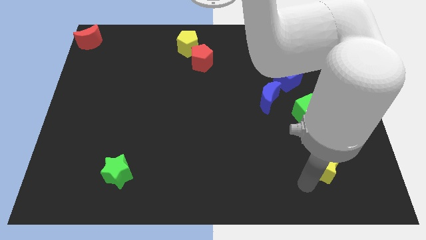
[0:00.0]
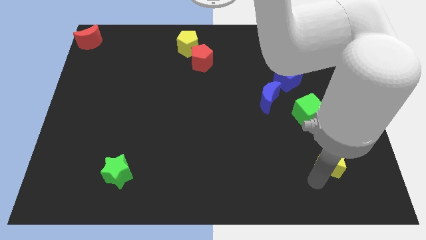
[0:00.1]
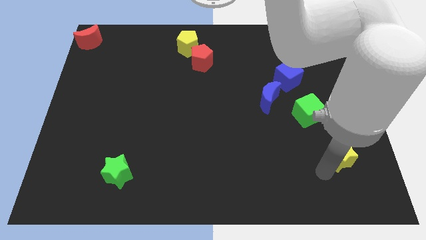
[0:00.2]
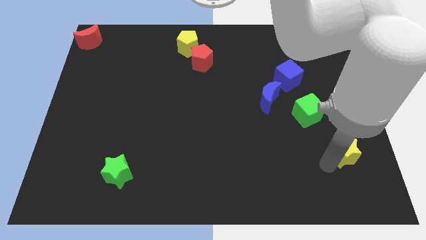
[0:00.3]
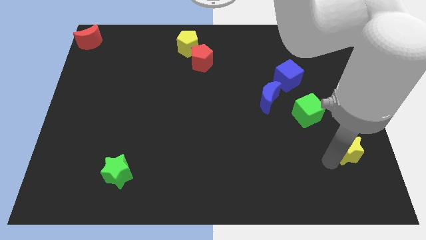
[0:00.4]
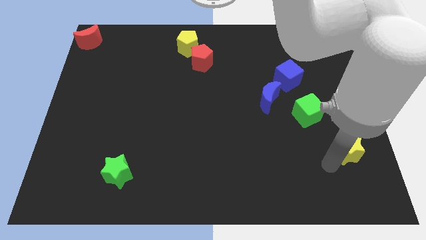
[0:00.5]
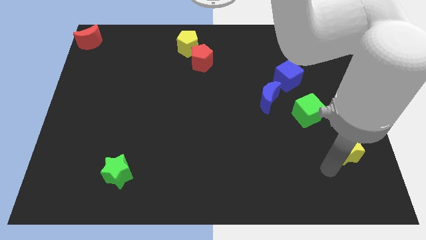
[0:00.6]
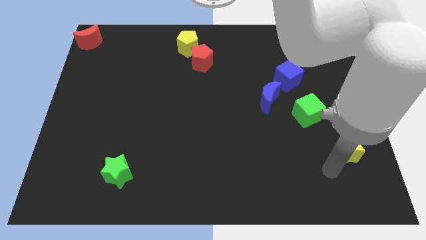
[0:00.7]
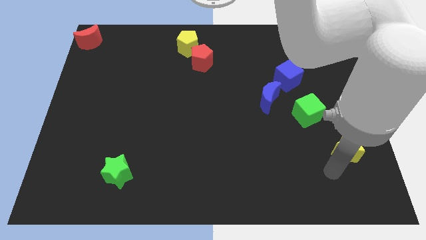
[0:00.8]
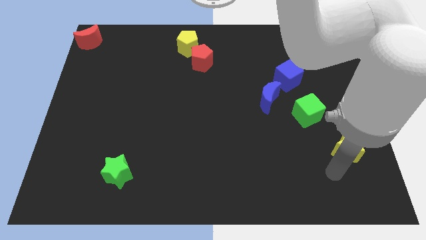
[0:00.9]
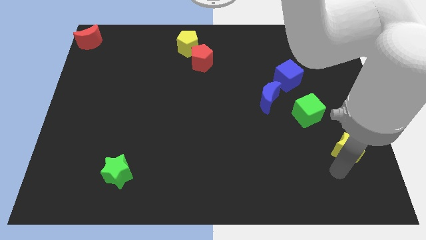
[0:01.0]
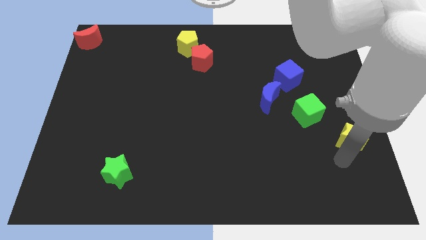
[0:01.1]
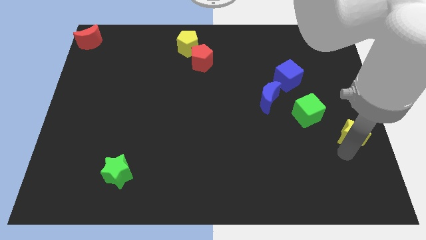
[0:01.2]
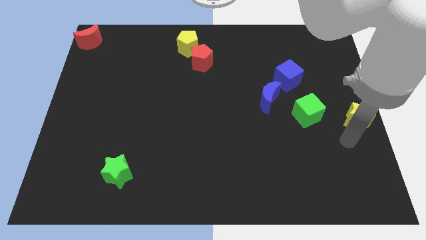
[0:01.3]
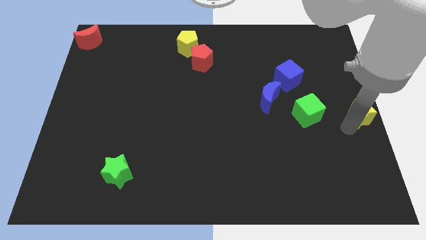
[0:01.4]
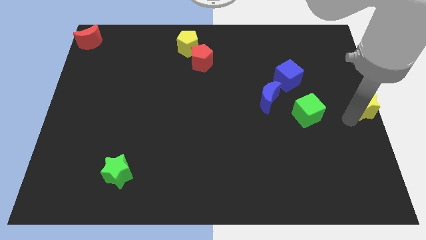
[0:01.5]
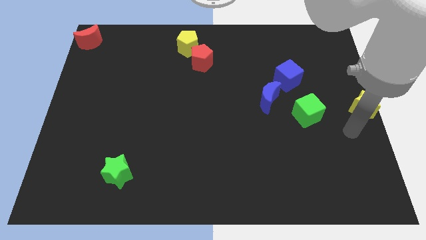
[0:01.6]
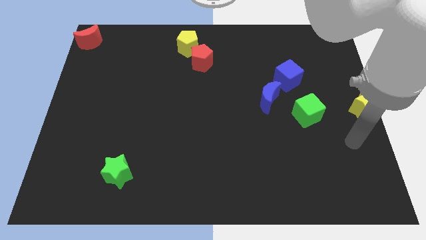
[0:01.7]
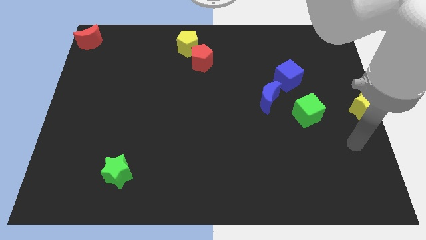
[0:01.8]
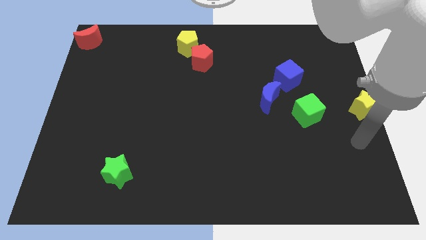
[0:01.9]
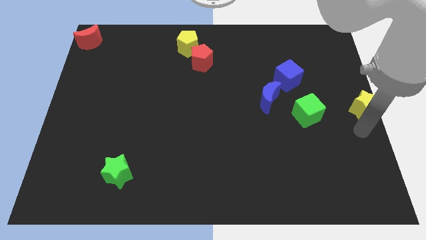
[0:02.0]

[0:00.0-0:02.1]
slide the yellow star to the right center of the board

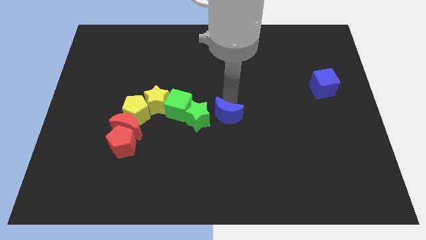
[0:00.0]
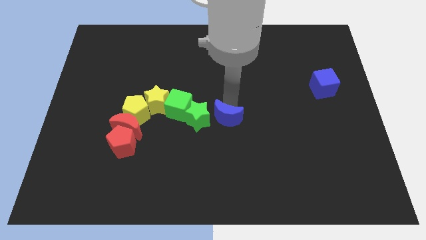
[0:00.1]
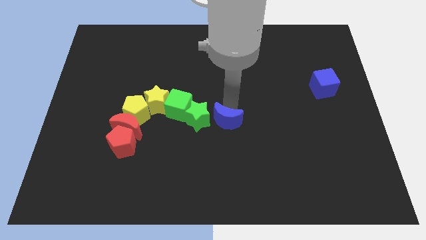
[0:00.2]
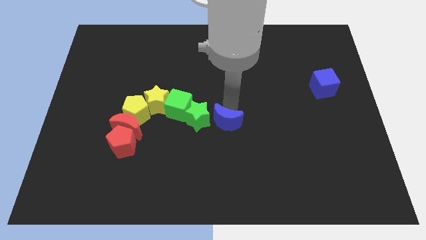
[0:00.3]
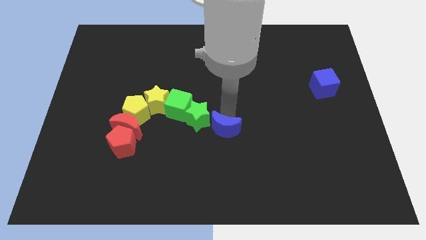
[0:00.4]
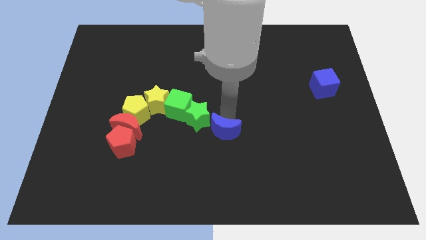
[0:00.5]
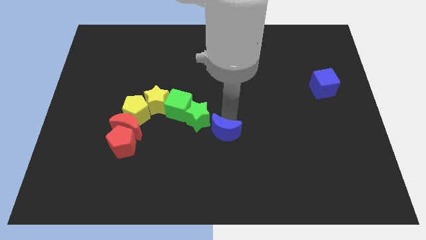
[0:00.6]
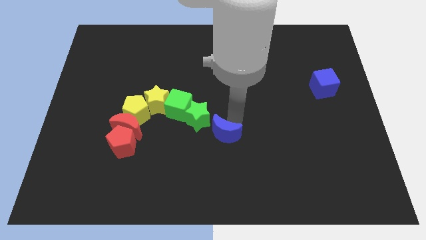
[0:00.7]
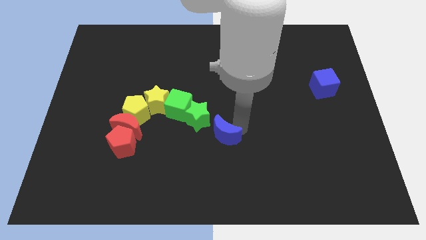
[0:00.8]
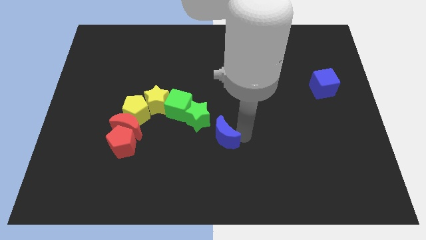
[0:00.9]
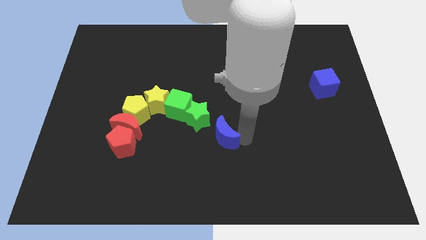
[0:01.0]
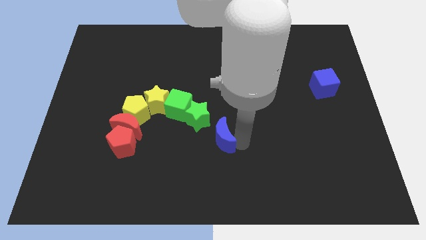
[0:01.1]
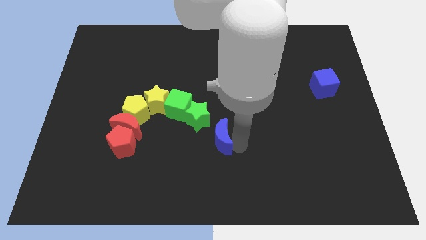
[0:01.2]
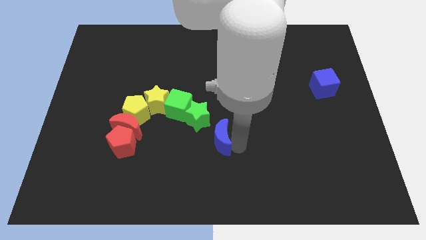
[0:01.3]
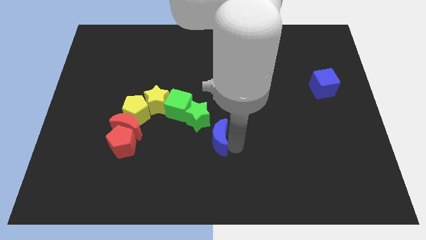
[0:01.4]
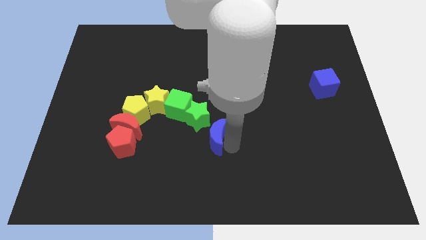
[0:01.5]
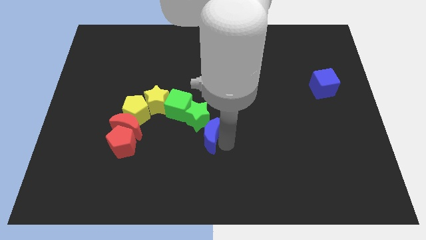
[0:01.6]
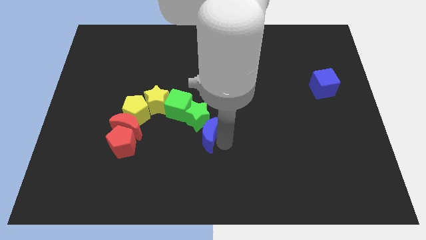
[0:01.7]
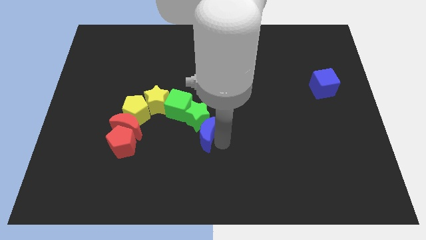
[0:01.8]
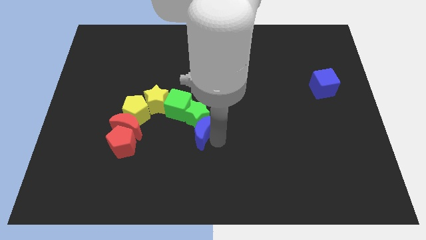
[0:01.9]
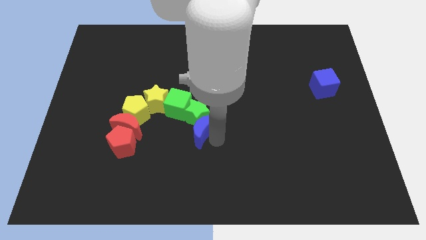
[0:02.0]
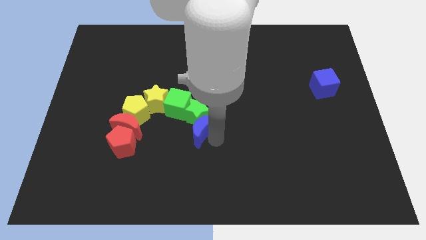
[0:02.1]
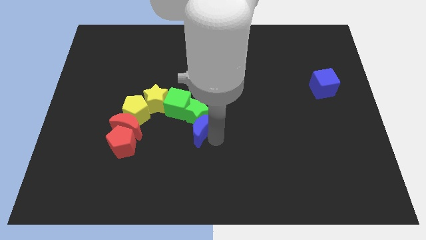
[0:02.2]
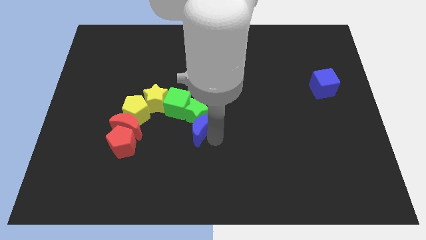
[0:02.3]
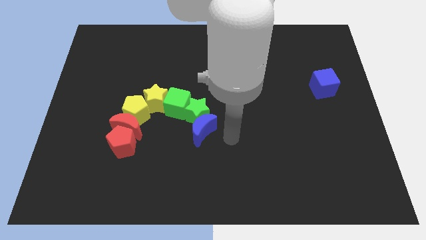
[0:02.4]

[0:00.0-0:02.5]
touch the green star with the blue moon

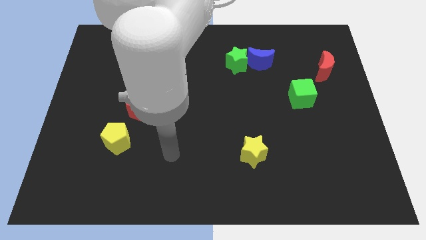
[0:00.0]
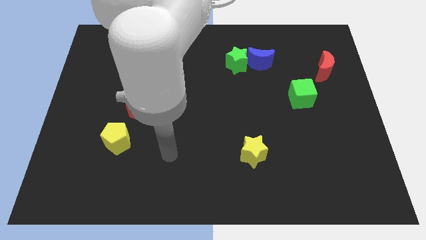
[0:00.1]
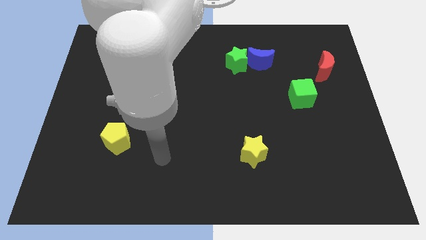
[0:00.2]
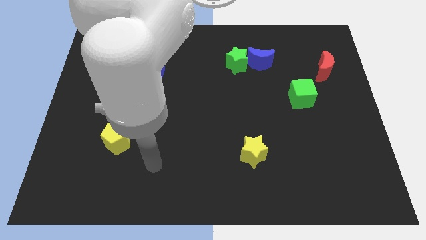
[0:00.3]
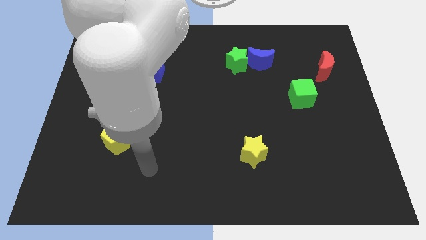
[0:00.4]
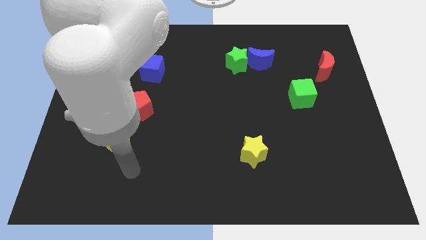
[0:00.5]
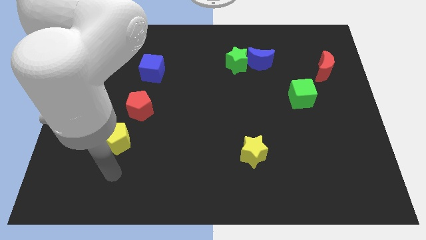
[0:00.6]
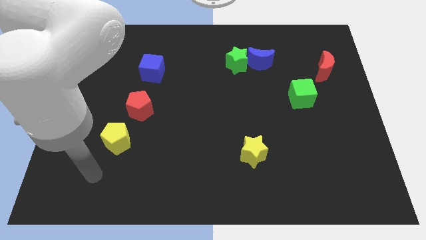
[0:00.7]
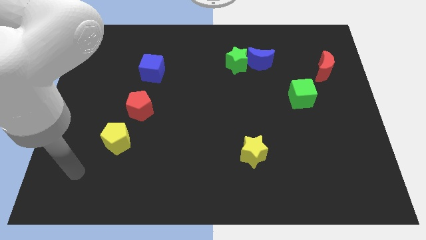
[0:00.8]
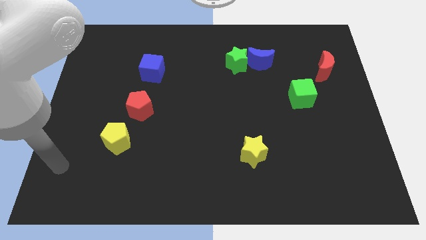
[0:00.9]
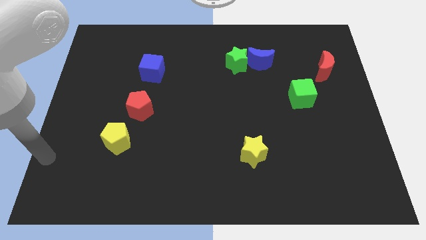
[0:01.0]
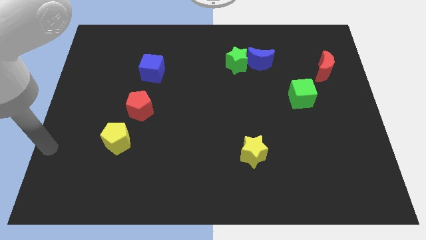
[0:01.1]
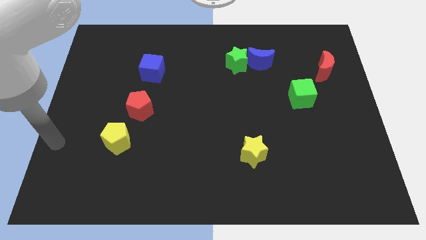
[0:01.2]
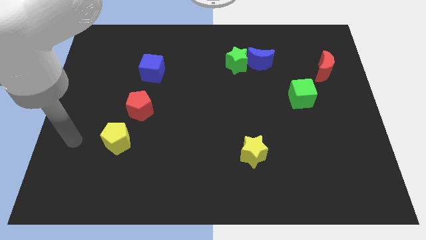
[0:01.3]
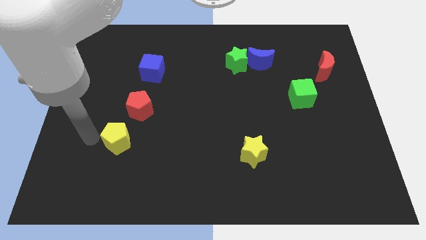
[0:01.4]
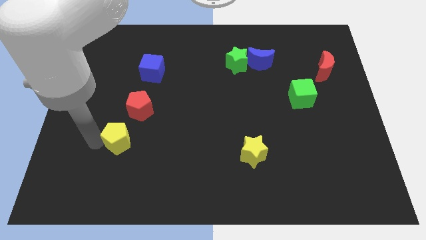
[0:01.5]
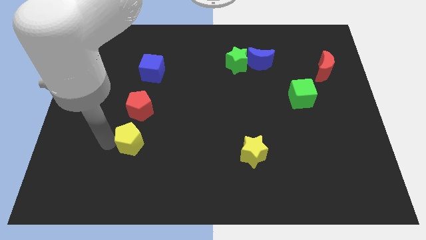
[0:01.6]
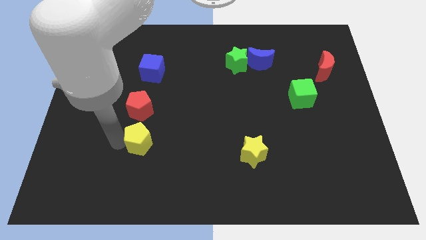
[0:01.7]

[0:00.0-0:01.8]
push the yellow pentagon below the red pentagon

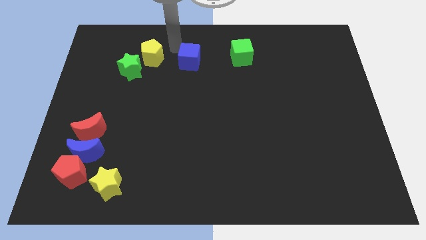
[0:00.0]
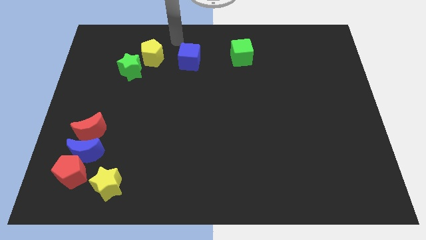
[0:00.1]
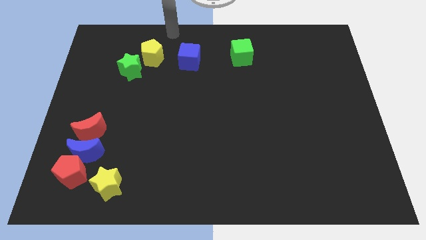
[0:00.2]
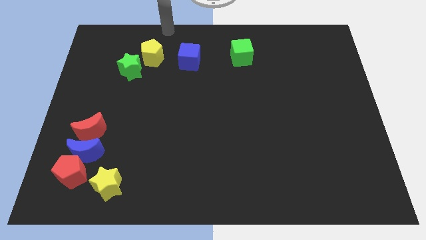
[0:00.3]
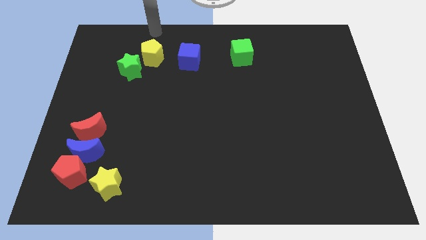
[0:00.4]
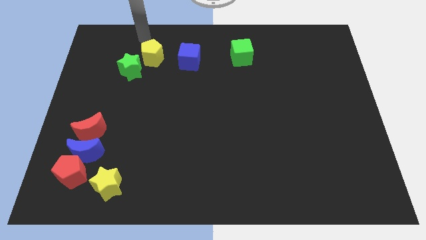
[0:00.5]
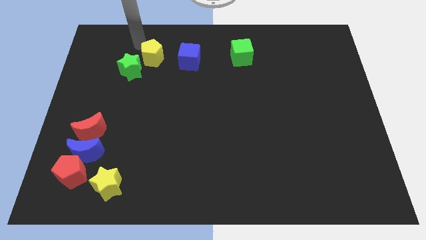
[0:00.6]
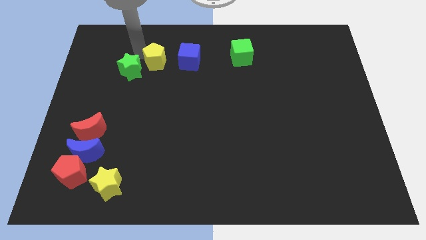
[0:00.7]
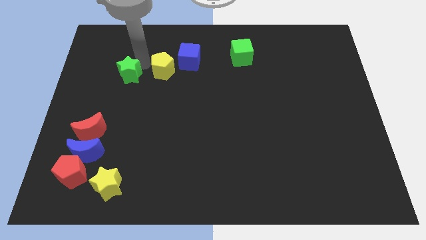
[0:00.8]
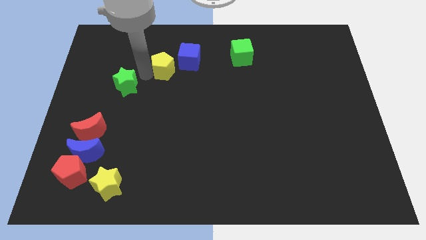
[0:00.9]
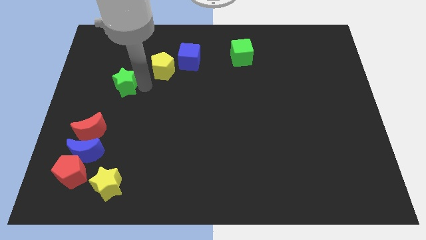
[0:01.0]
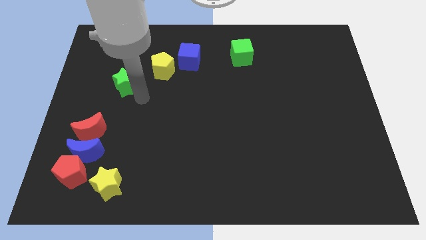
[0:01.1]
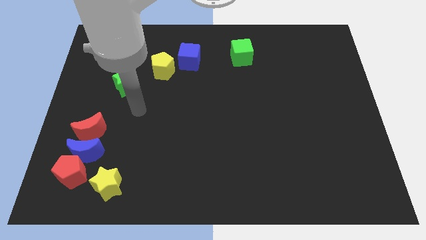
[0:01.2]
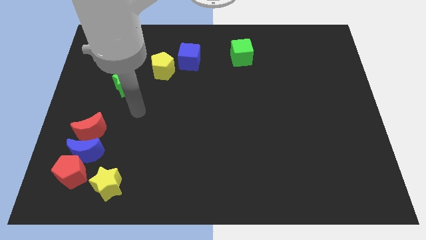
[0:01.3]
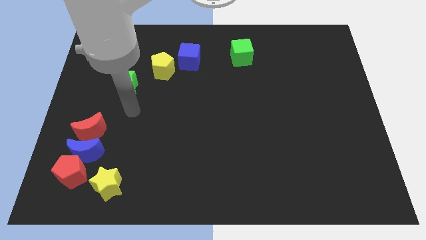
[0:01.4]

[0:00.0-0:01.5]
separate the green star and the yellow pentagon

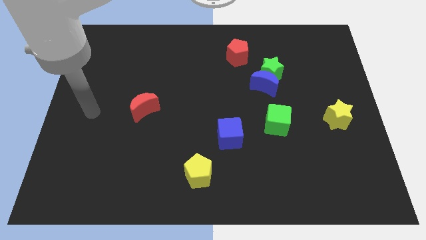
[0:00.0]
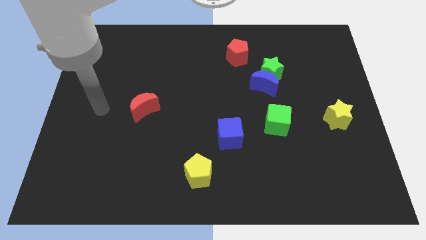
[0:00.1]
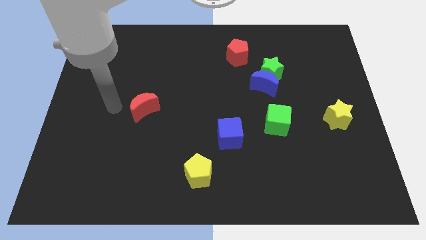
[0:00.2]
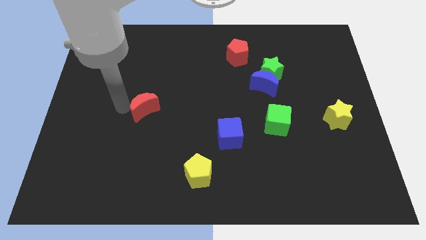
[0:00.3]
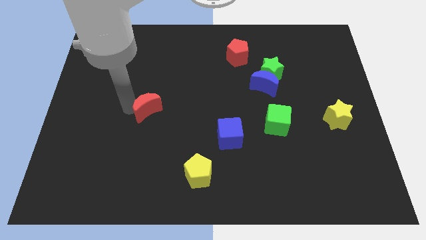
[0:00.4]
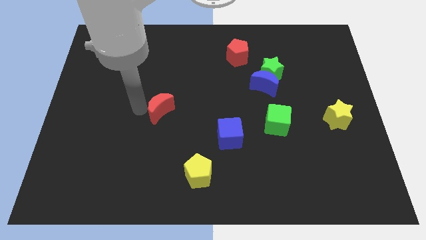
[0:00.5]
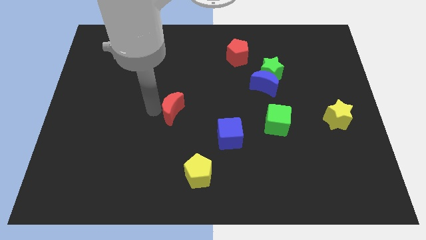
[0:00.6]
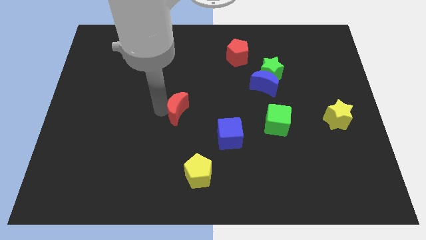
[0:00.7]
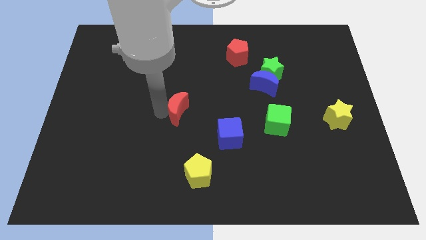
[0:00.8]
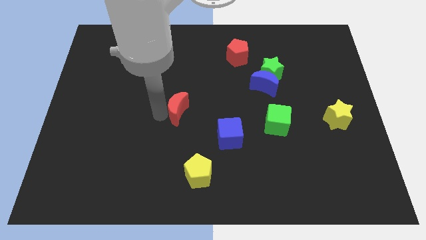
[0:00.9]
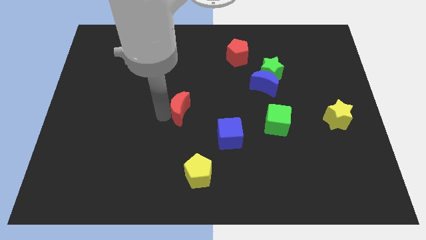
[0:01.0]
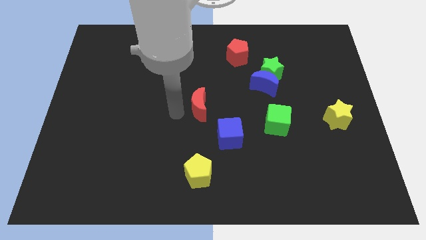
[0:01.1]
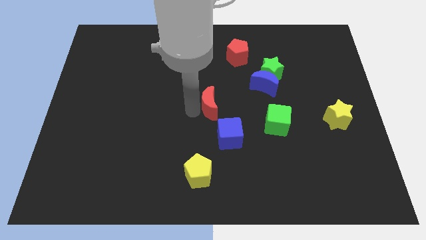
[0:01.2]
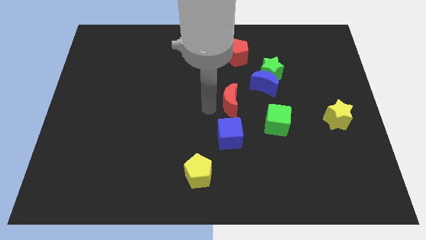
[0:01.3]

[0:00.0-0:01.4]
move the red crescent towards the centre of the board
